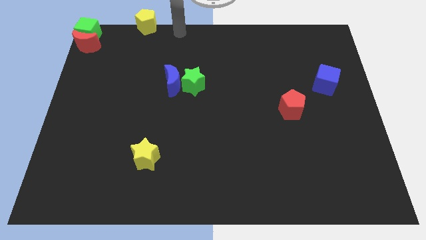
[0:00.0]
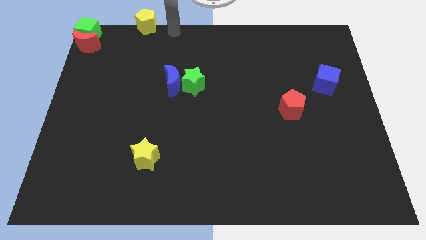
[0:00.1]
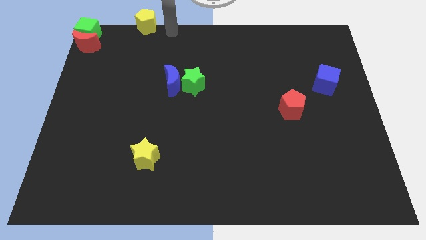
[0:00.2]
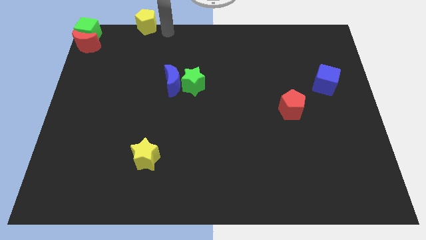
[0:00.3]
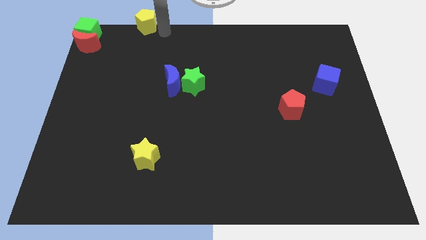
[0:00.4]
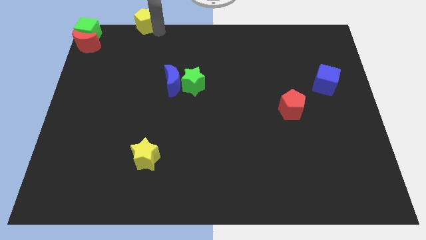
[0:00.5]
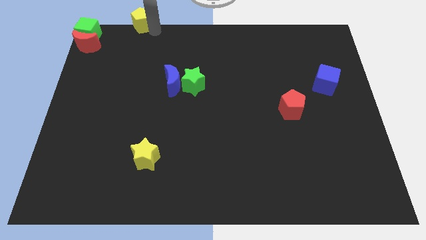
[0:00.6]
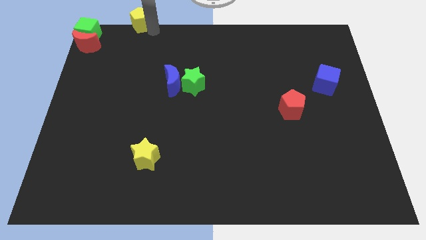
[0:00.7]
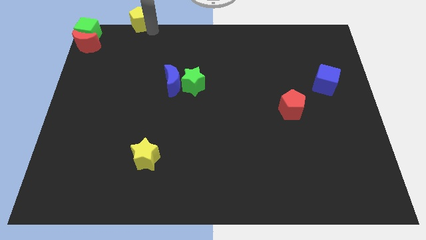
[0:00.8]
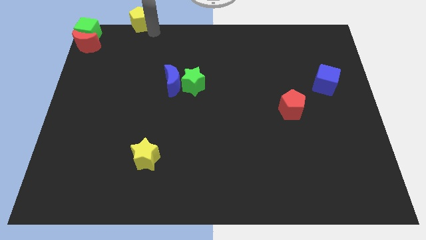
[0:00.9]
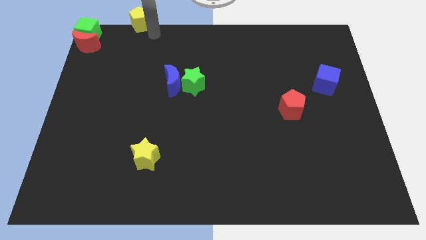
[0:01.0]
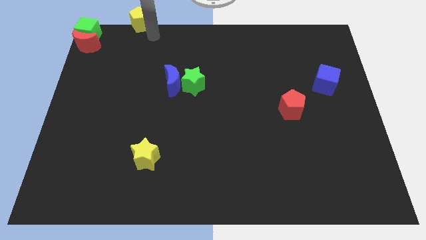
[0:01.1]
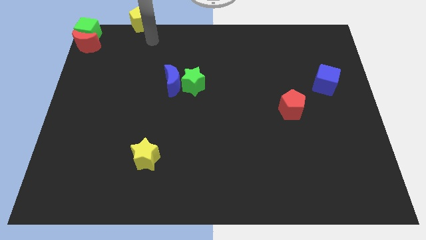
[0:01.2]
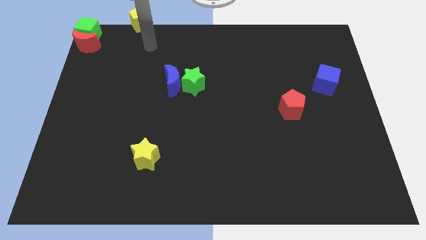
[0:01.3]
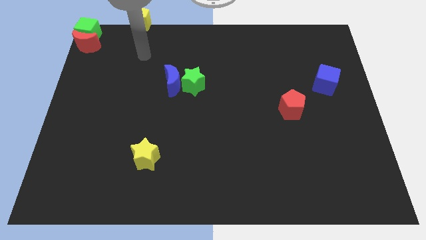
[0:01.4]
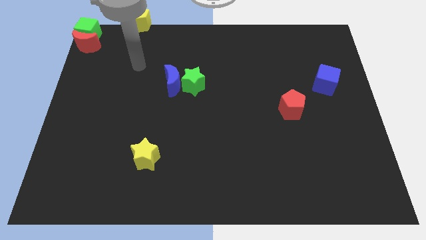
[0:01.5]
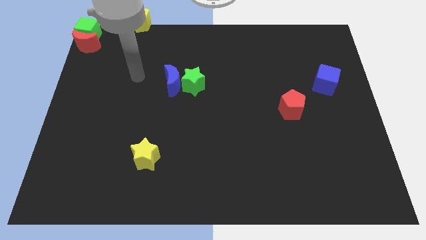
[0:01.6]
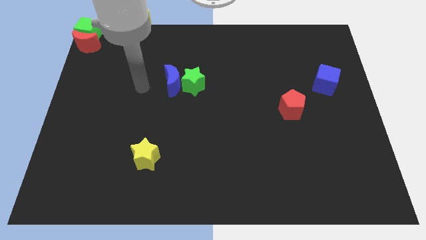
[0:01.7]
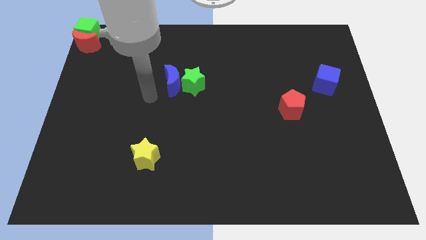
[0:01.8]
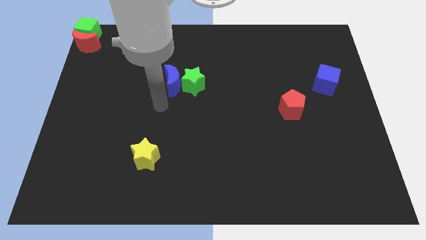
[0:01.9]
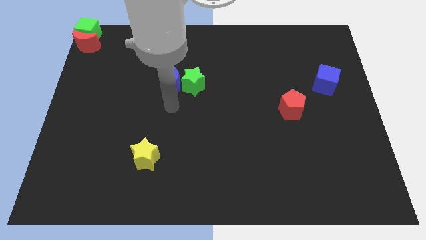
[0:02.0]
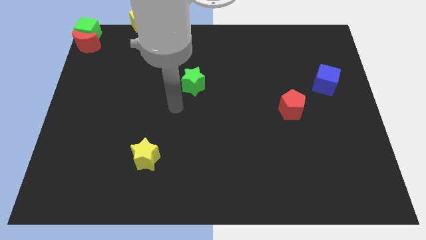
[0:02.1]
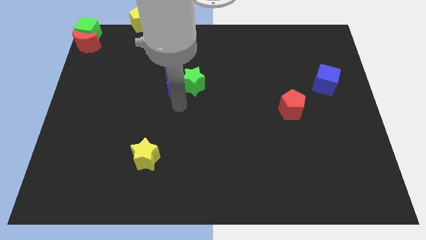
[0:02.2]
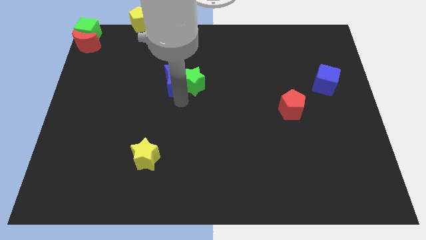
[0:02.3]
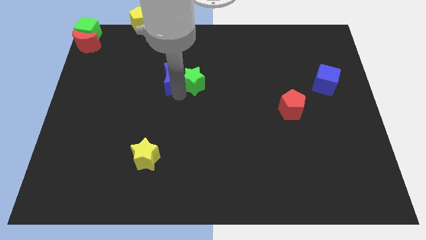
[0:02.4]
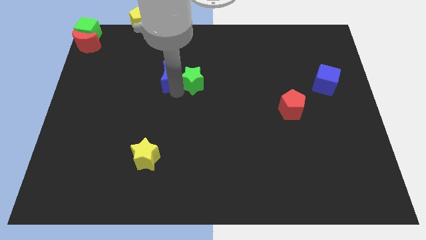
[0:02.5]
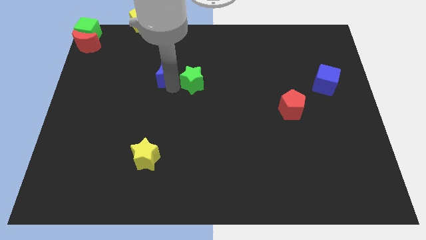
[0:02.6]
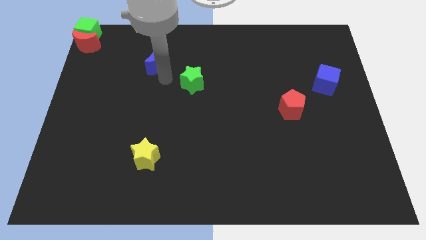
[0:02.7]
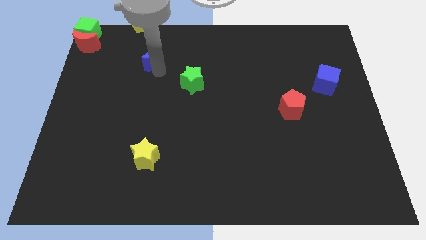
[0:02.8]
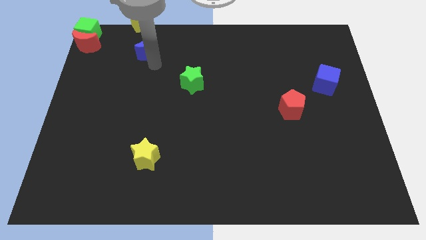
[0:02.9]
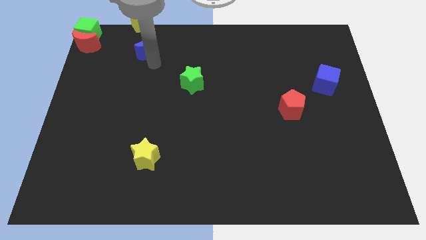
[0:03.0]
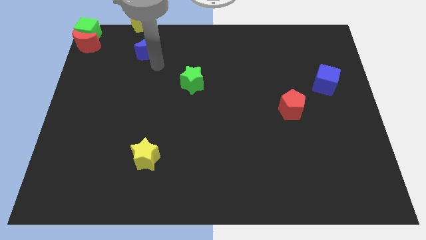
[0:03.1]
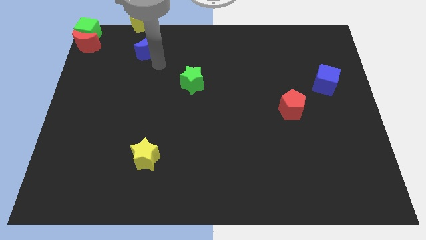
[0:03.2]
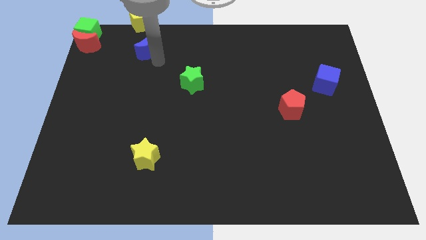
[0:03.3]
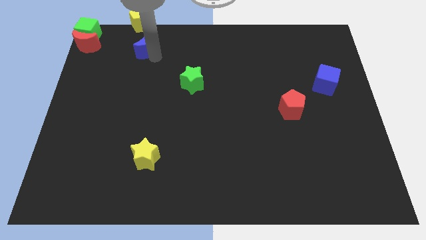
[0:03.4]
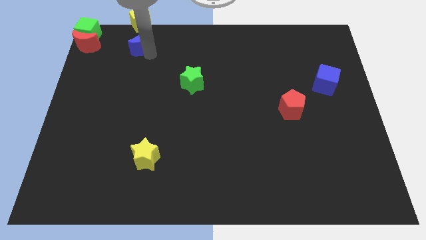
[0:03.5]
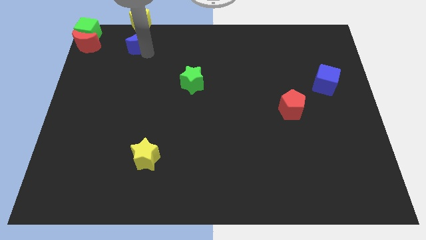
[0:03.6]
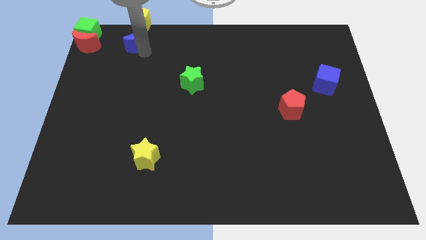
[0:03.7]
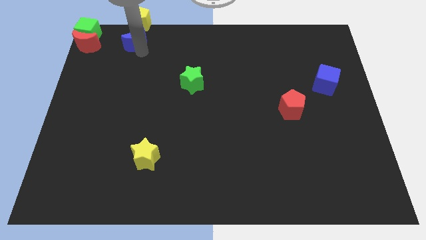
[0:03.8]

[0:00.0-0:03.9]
place blue crescent below yellow pentagon

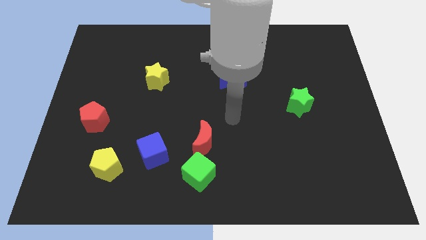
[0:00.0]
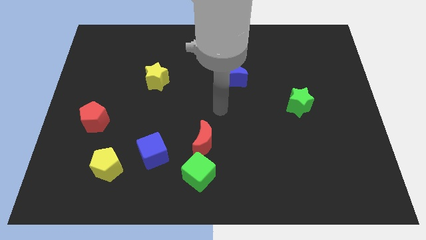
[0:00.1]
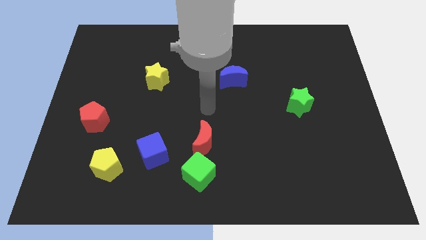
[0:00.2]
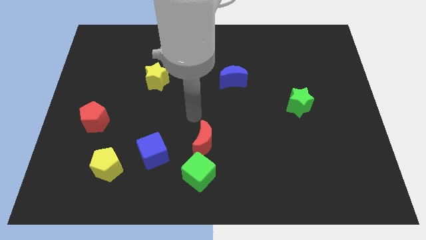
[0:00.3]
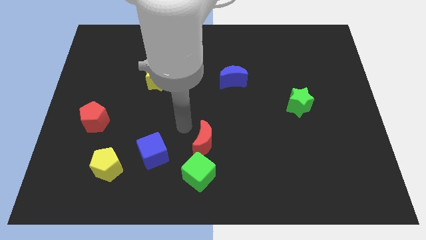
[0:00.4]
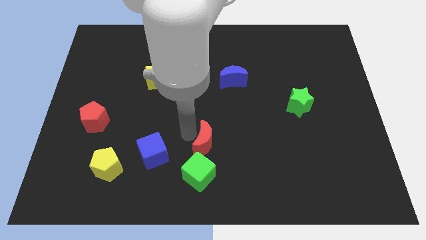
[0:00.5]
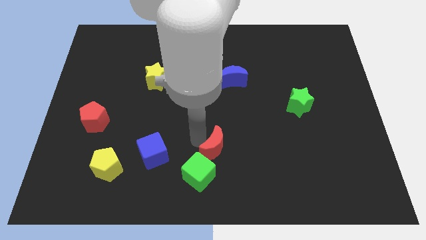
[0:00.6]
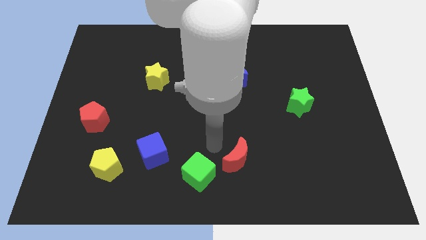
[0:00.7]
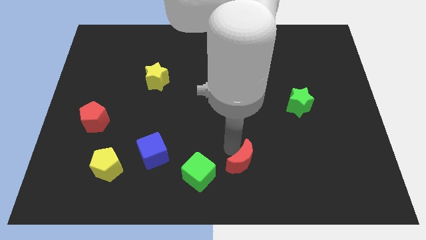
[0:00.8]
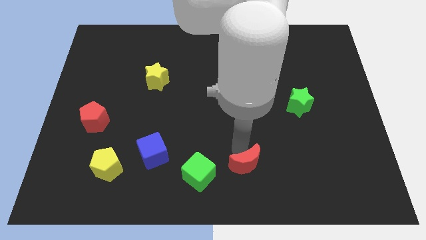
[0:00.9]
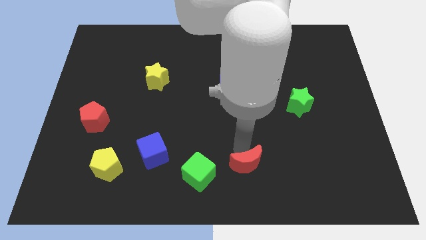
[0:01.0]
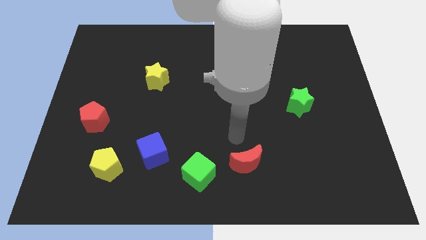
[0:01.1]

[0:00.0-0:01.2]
place the red crescent to the right of the green cube

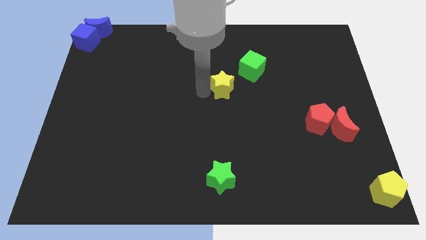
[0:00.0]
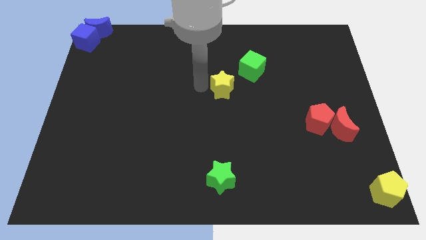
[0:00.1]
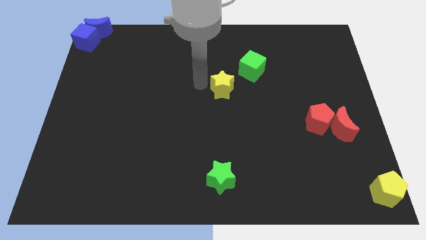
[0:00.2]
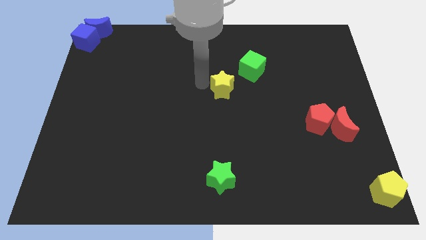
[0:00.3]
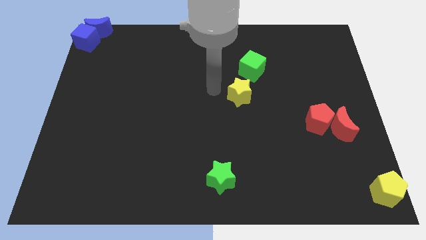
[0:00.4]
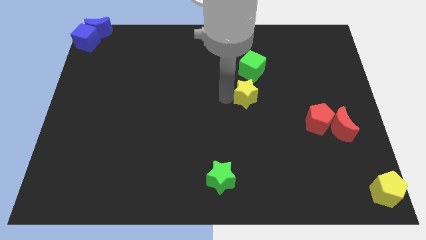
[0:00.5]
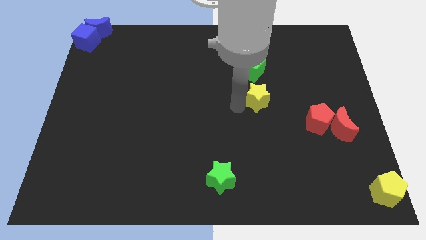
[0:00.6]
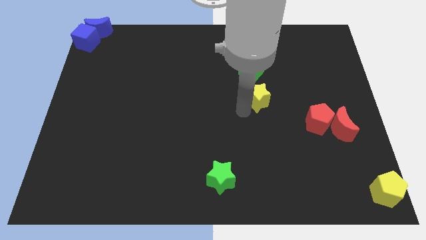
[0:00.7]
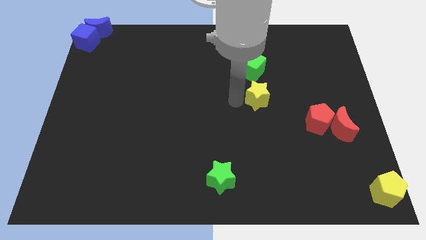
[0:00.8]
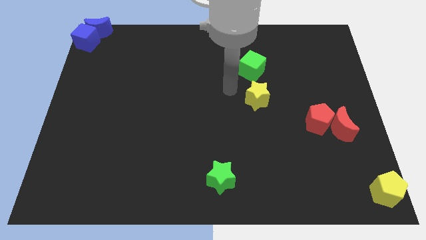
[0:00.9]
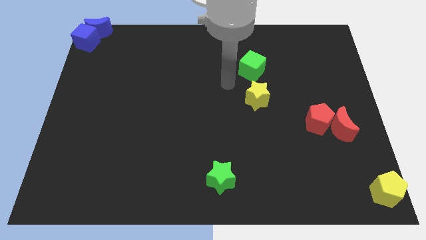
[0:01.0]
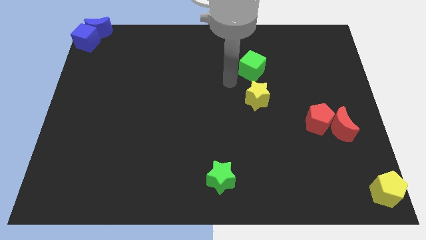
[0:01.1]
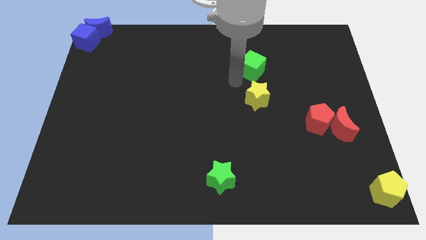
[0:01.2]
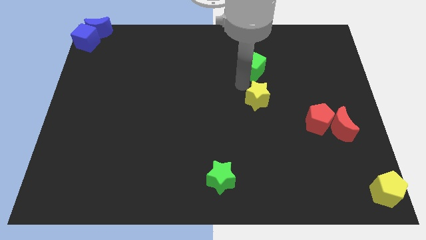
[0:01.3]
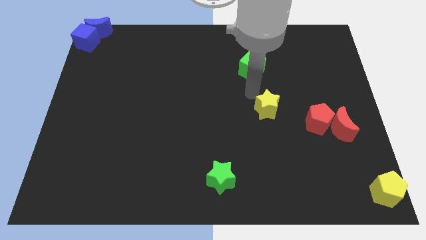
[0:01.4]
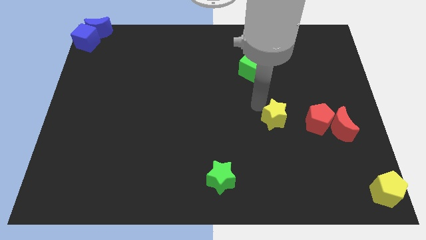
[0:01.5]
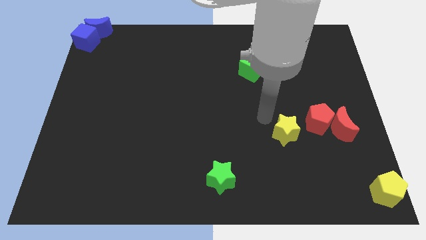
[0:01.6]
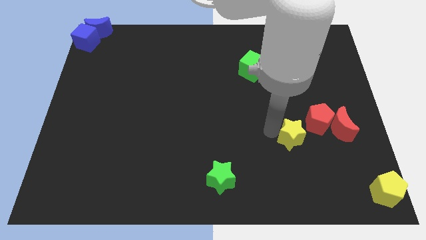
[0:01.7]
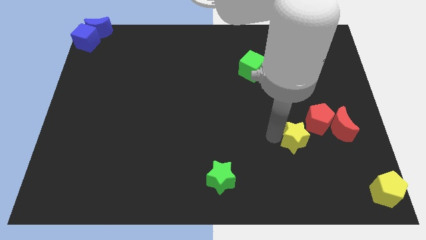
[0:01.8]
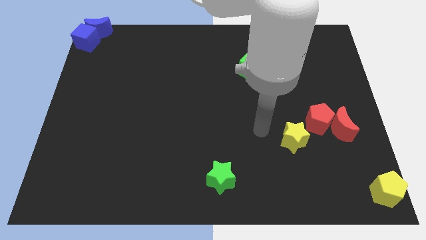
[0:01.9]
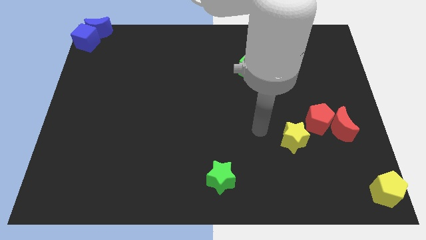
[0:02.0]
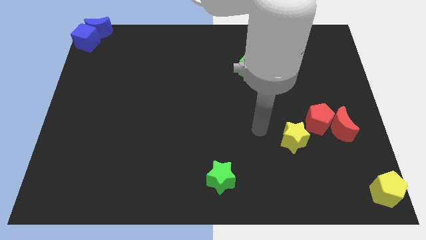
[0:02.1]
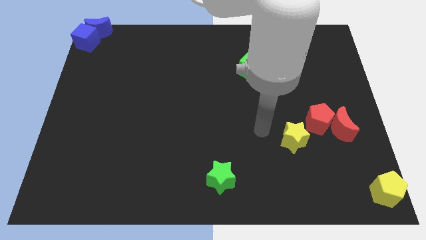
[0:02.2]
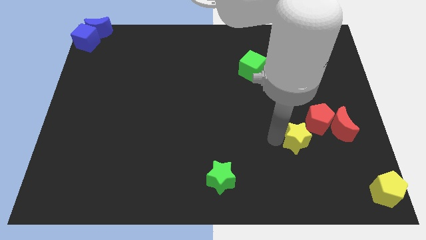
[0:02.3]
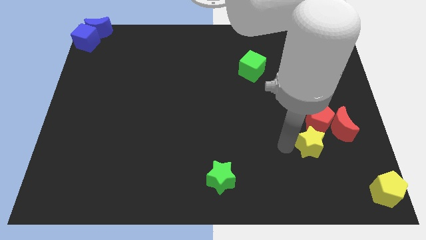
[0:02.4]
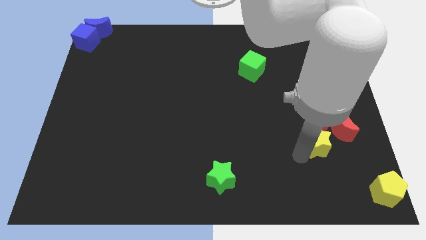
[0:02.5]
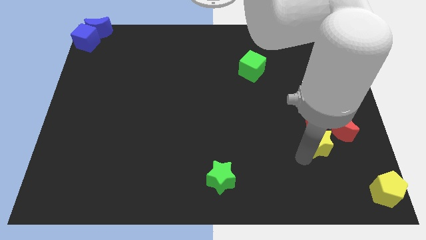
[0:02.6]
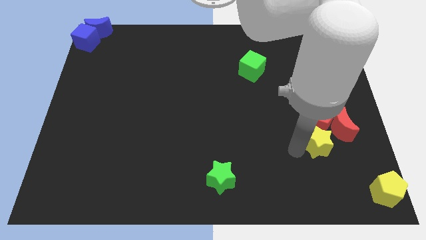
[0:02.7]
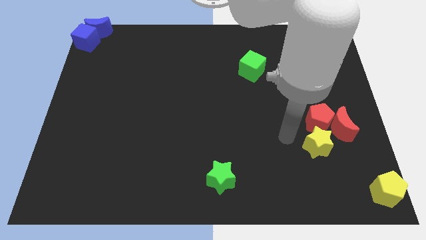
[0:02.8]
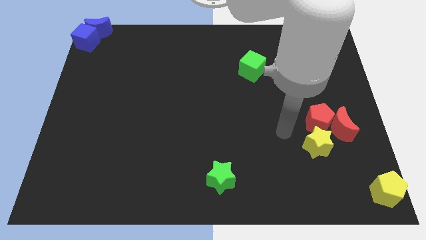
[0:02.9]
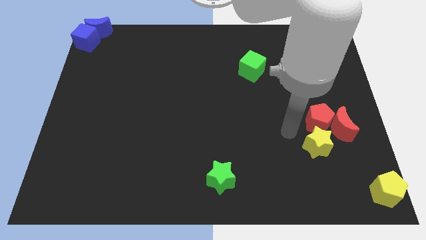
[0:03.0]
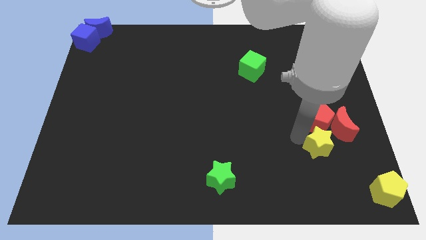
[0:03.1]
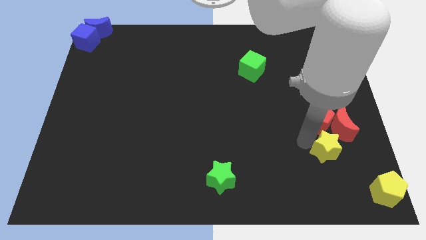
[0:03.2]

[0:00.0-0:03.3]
push the yellow star vertically below the red pentagon

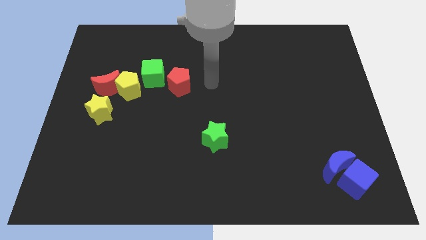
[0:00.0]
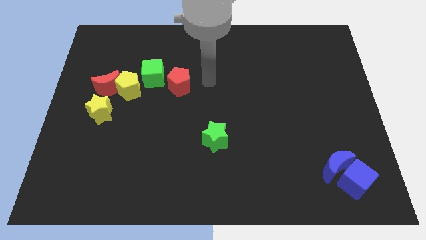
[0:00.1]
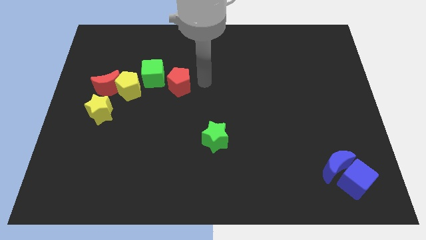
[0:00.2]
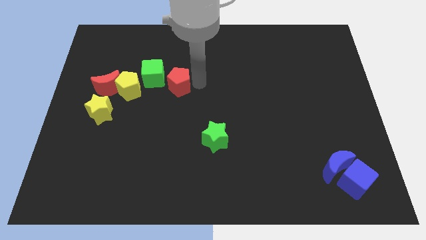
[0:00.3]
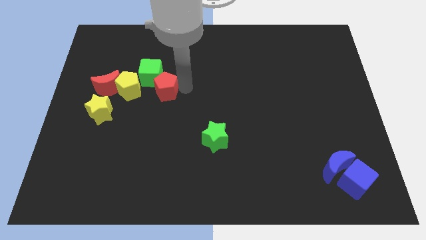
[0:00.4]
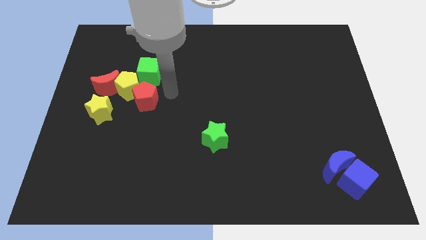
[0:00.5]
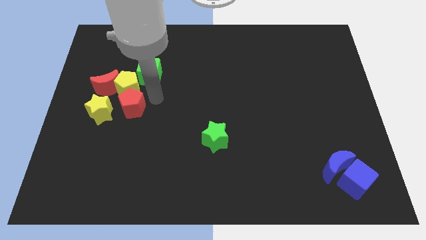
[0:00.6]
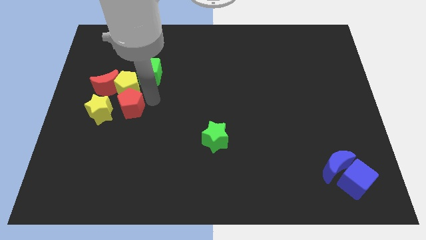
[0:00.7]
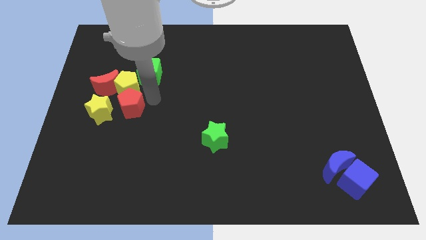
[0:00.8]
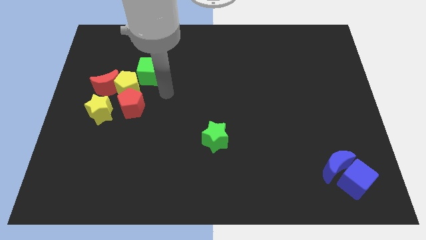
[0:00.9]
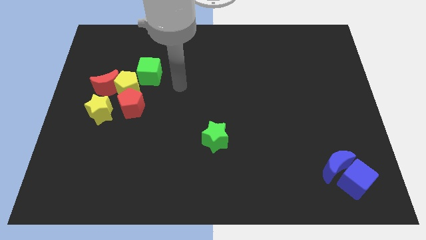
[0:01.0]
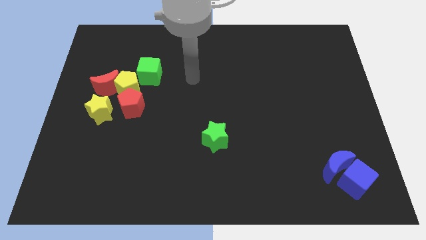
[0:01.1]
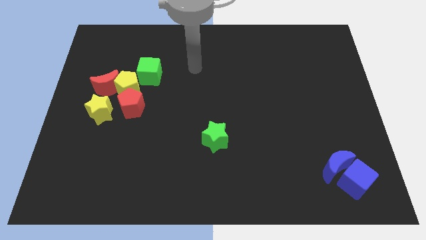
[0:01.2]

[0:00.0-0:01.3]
push red pentagon below the yellow pentagon
